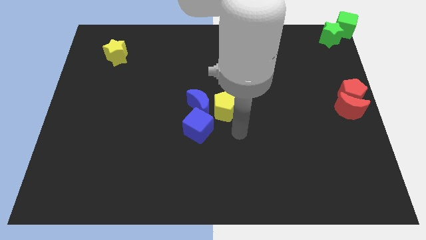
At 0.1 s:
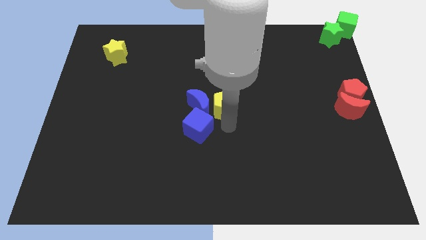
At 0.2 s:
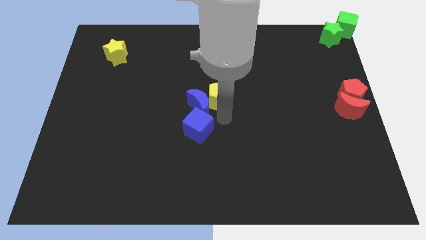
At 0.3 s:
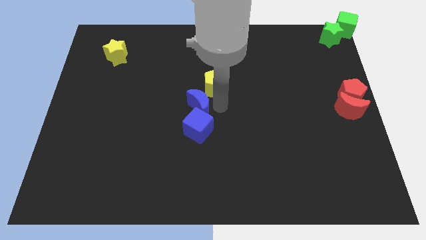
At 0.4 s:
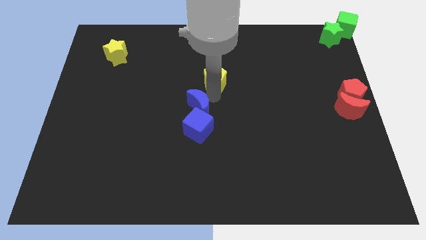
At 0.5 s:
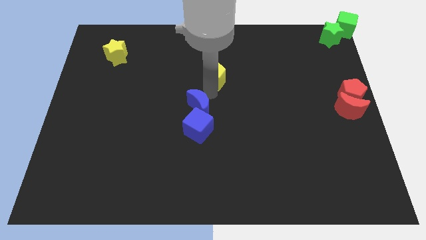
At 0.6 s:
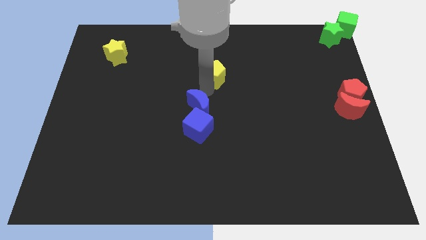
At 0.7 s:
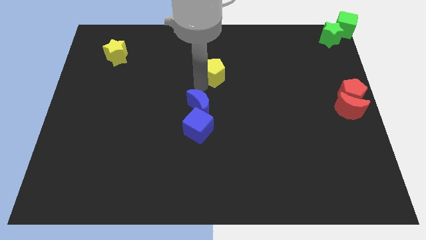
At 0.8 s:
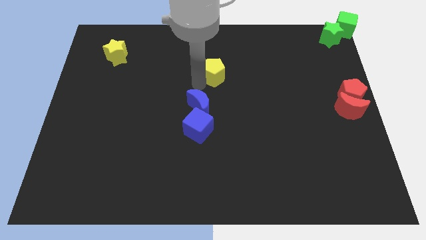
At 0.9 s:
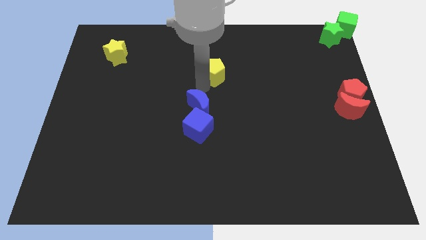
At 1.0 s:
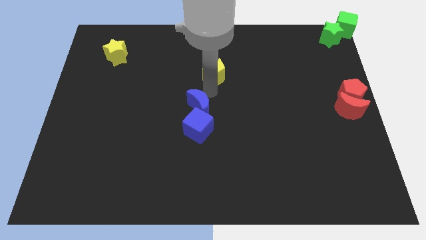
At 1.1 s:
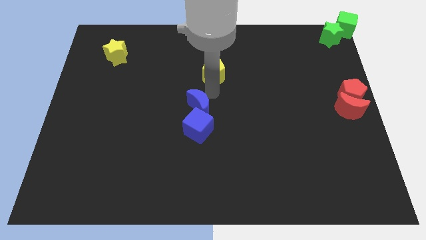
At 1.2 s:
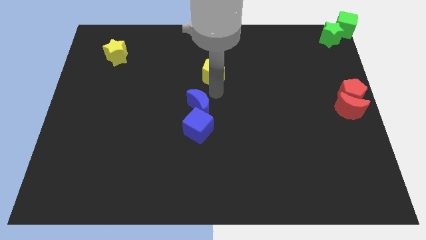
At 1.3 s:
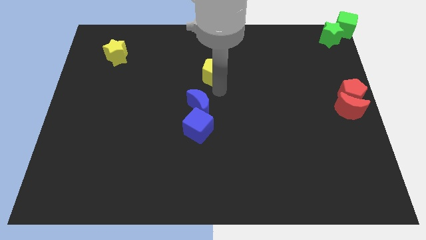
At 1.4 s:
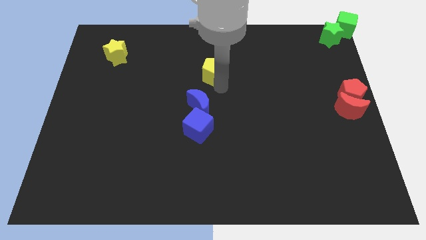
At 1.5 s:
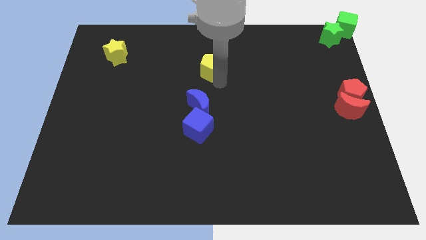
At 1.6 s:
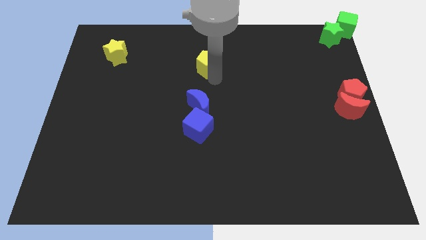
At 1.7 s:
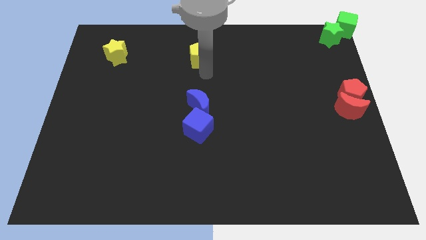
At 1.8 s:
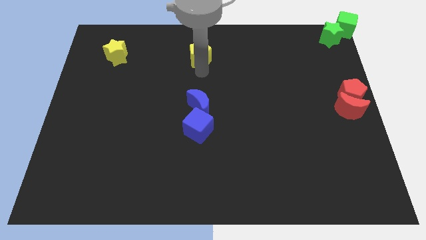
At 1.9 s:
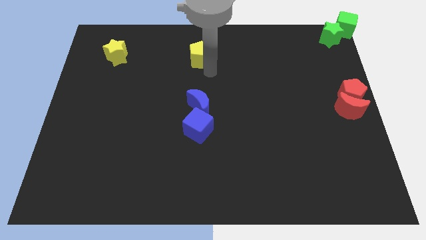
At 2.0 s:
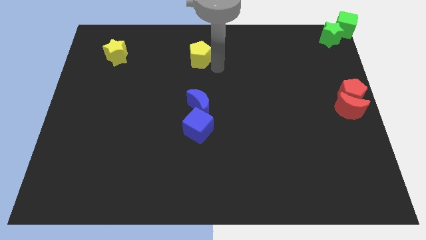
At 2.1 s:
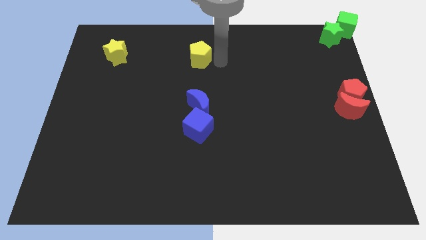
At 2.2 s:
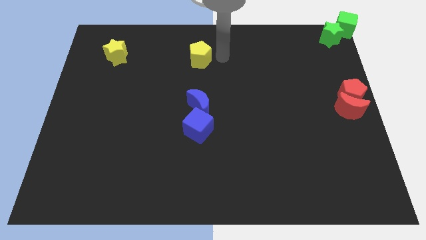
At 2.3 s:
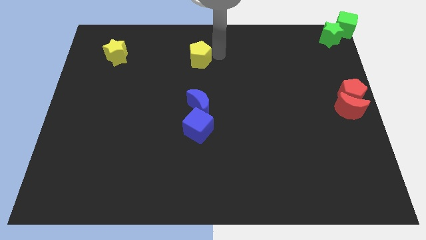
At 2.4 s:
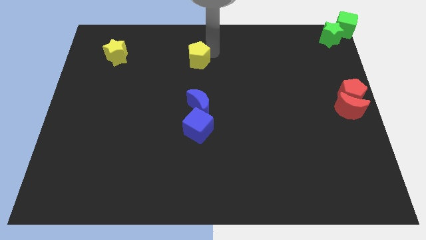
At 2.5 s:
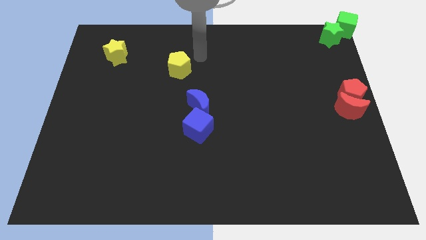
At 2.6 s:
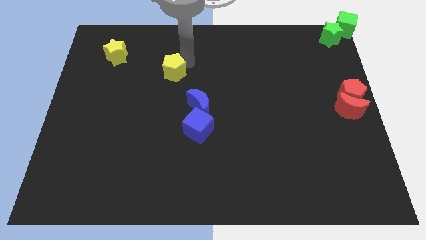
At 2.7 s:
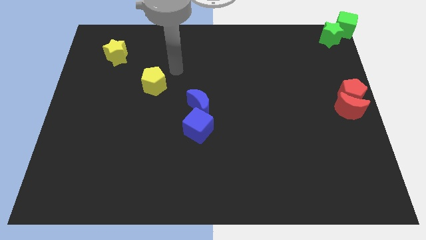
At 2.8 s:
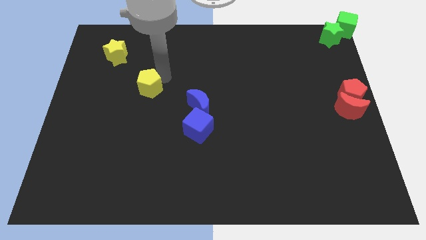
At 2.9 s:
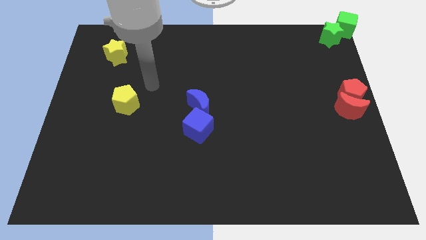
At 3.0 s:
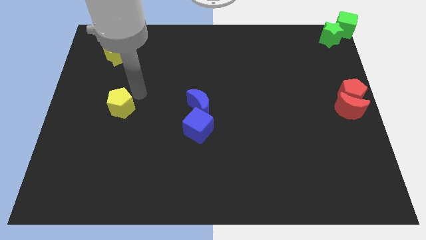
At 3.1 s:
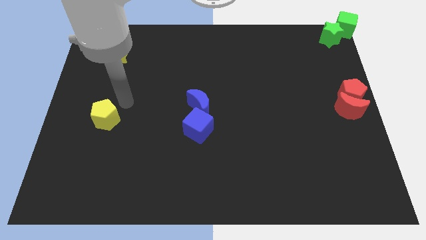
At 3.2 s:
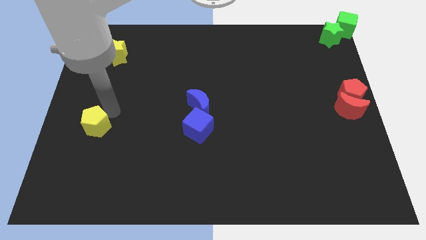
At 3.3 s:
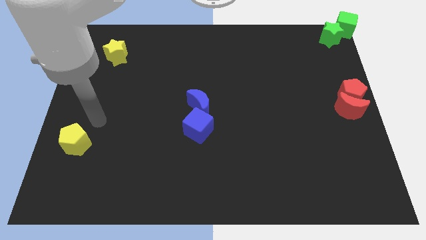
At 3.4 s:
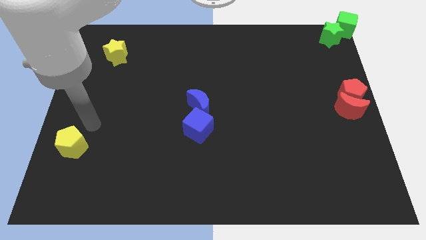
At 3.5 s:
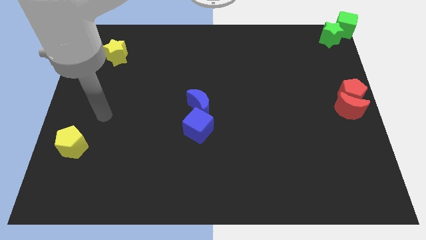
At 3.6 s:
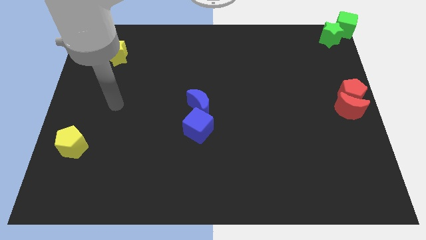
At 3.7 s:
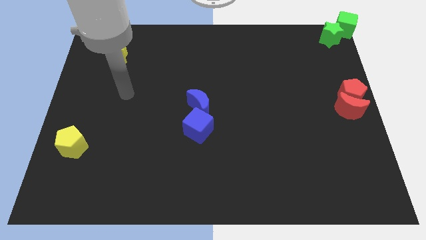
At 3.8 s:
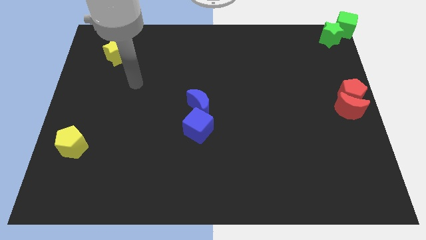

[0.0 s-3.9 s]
place yellow pentagon towards bottom left corner of the board

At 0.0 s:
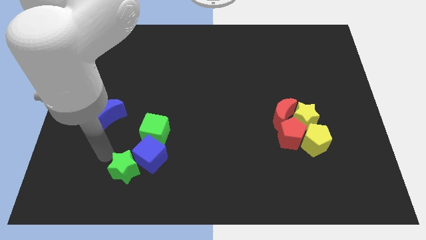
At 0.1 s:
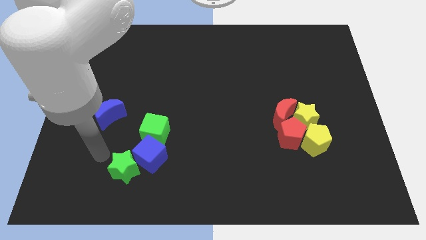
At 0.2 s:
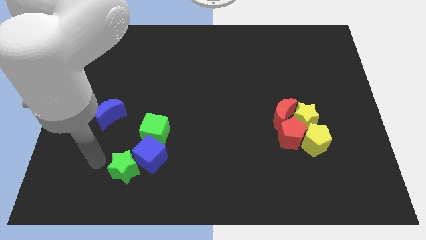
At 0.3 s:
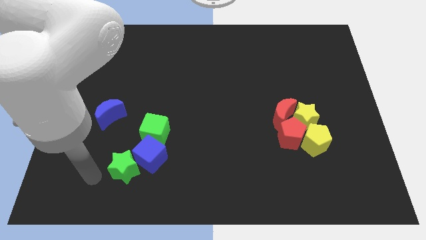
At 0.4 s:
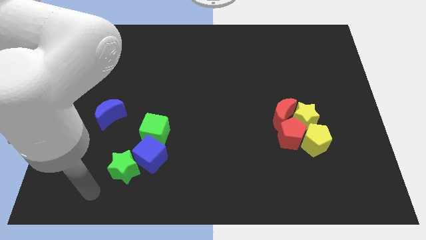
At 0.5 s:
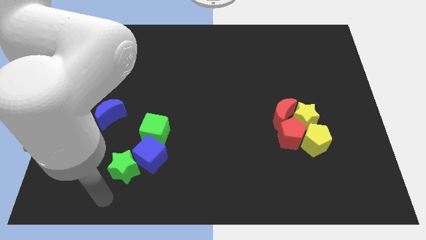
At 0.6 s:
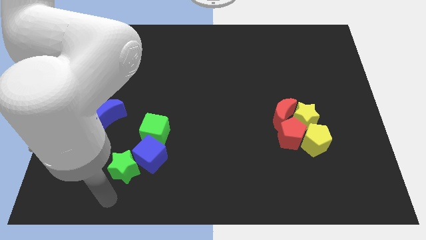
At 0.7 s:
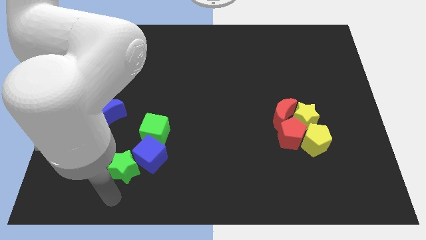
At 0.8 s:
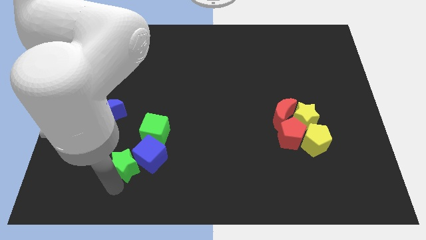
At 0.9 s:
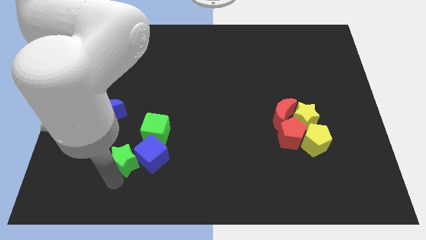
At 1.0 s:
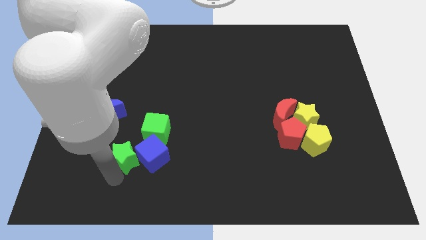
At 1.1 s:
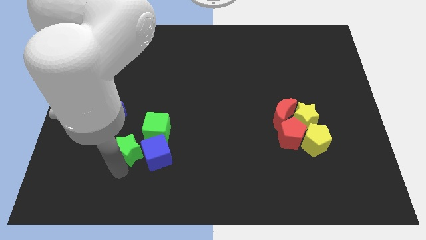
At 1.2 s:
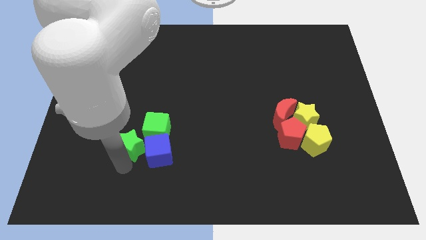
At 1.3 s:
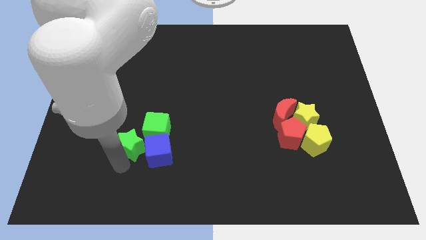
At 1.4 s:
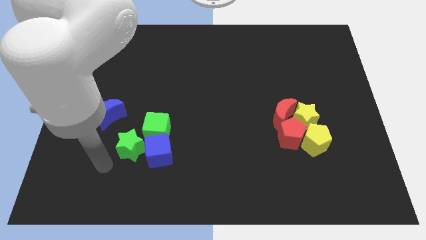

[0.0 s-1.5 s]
push the green star to the left of blue cube

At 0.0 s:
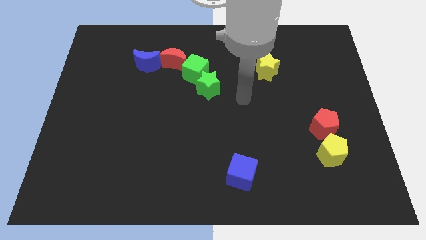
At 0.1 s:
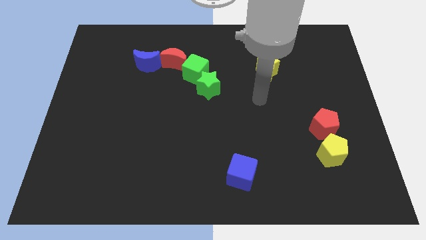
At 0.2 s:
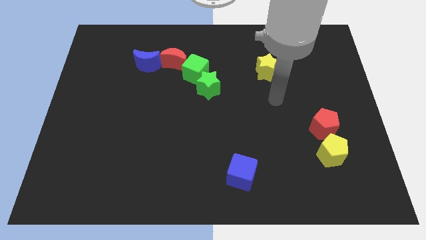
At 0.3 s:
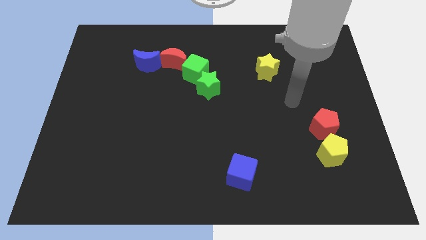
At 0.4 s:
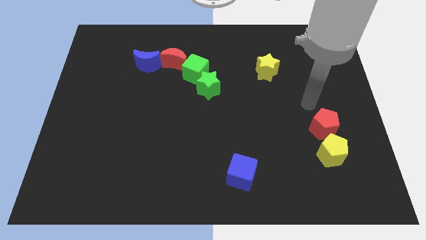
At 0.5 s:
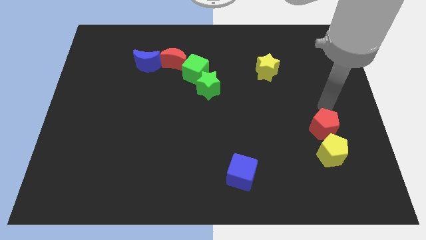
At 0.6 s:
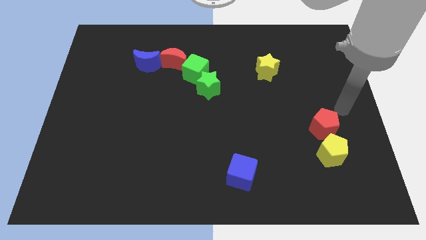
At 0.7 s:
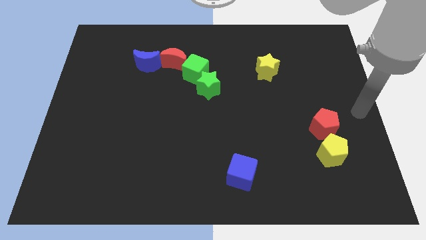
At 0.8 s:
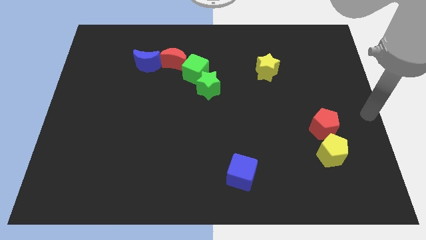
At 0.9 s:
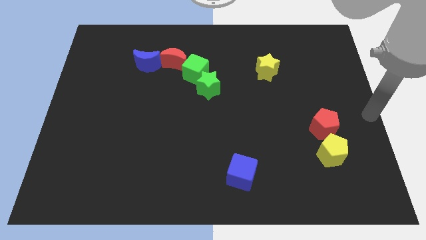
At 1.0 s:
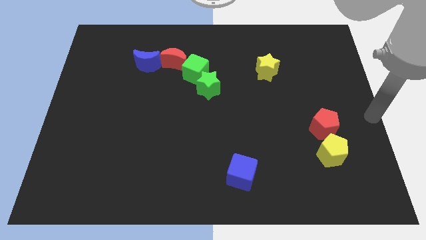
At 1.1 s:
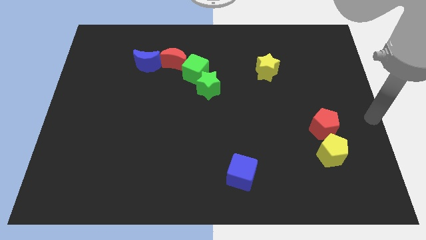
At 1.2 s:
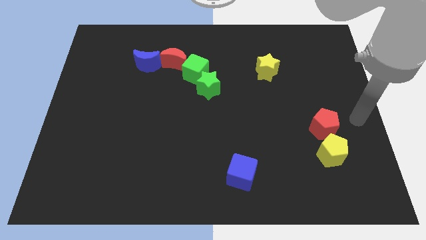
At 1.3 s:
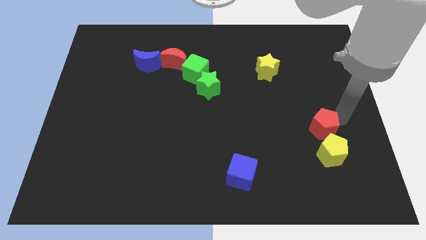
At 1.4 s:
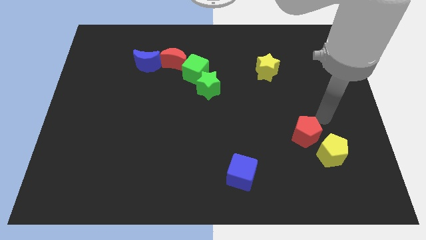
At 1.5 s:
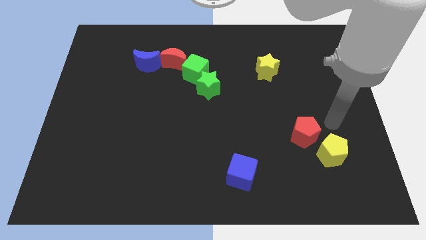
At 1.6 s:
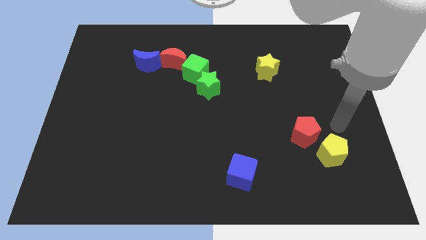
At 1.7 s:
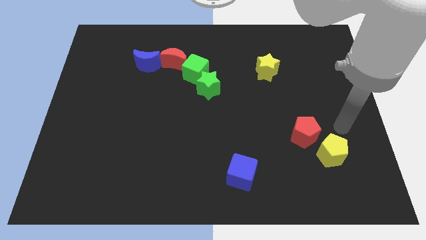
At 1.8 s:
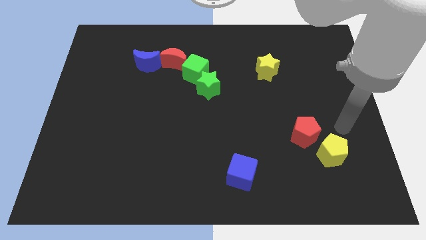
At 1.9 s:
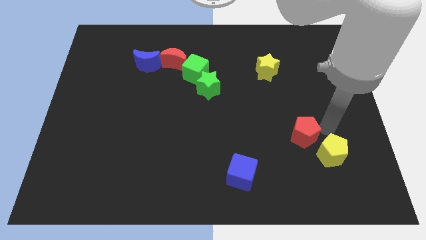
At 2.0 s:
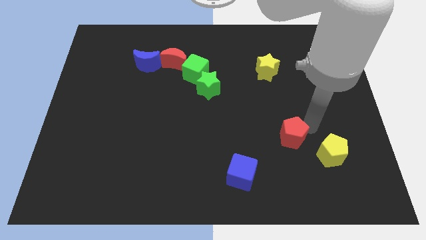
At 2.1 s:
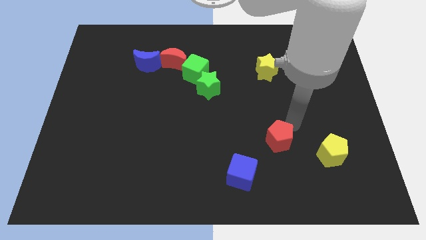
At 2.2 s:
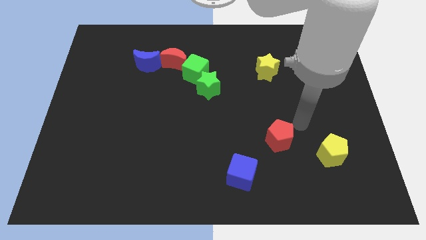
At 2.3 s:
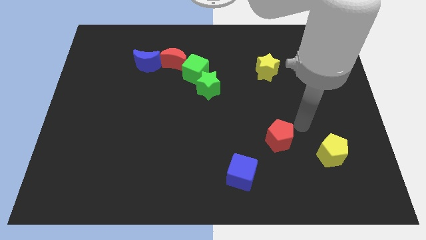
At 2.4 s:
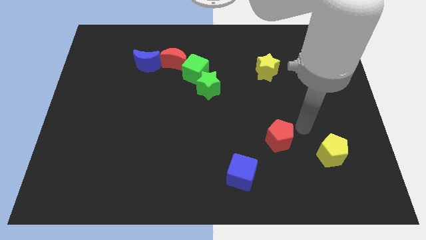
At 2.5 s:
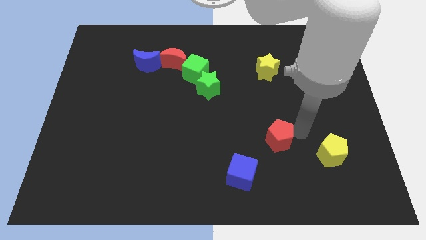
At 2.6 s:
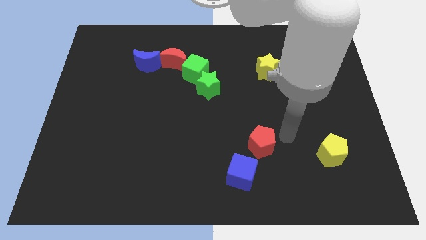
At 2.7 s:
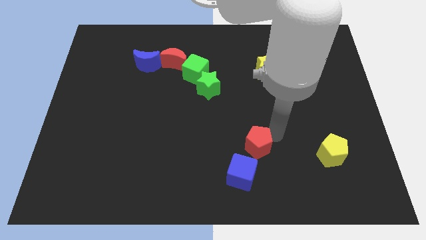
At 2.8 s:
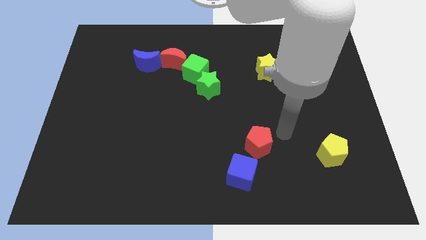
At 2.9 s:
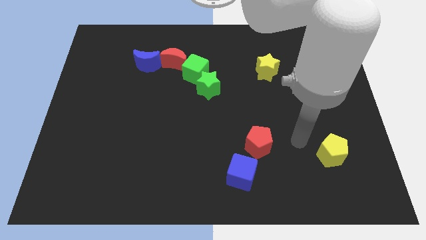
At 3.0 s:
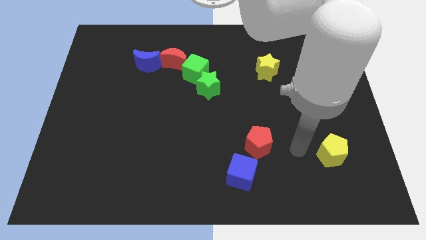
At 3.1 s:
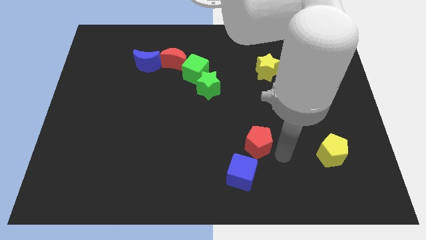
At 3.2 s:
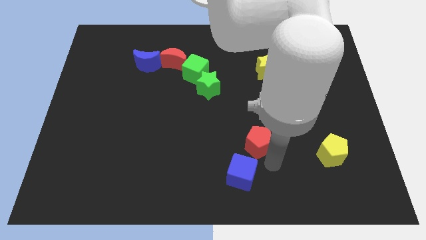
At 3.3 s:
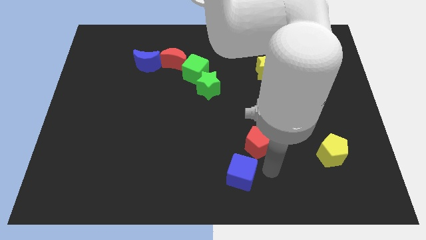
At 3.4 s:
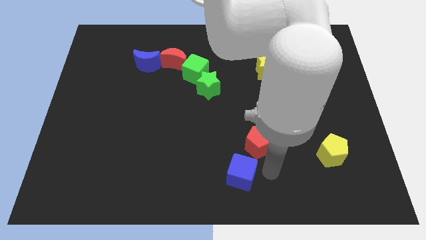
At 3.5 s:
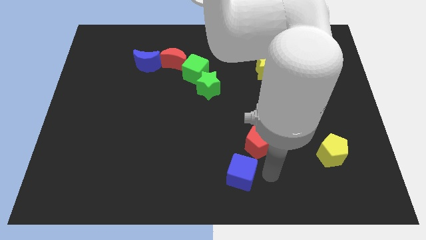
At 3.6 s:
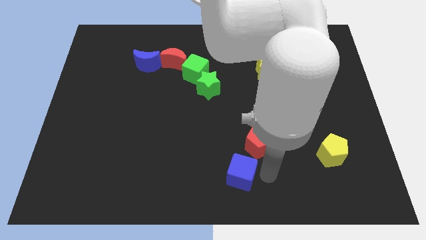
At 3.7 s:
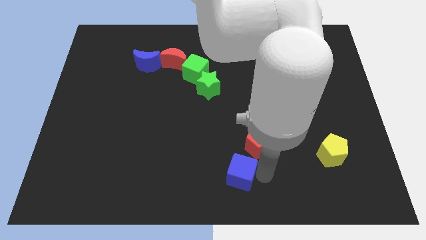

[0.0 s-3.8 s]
place the red pentagon above the blue cube
